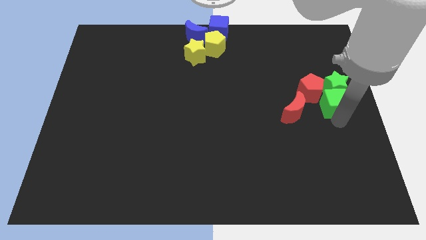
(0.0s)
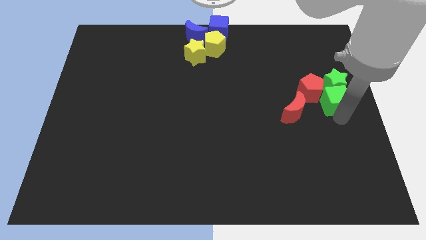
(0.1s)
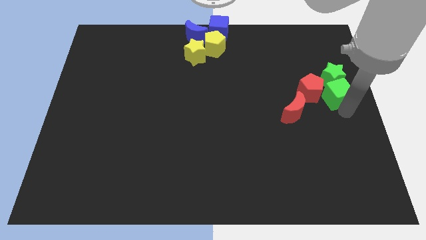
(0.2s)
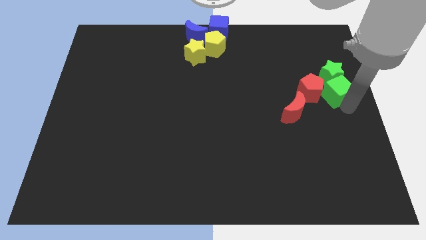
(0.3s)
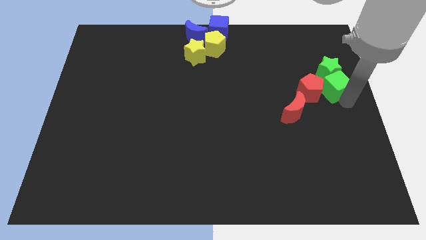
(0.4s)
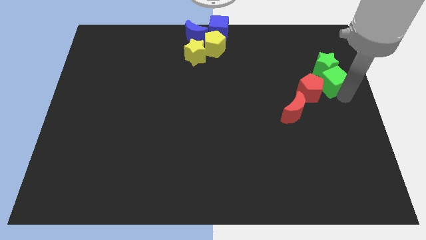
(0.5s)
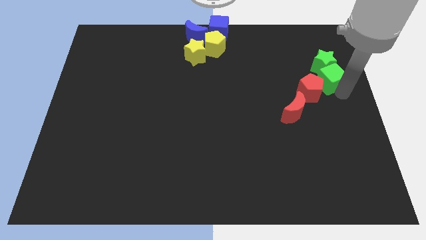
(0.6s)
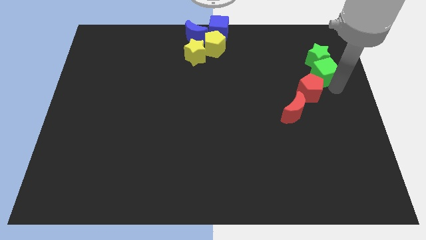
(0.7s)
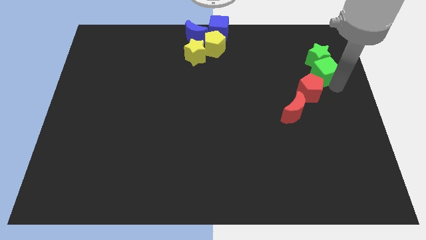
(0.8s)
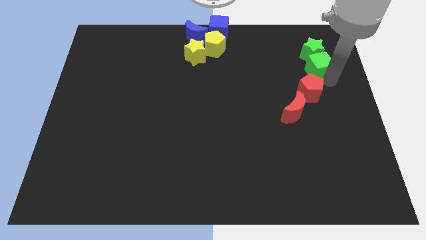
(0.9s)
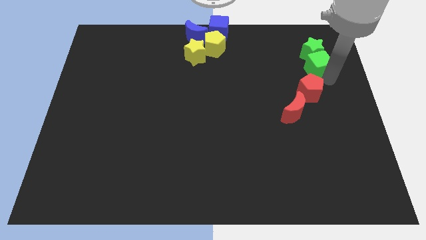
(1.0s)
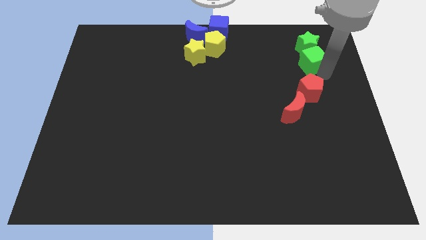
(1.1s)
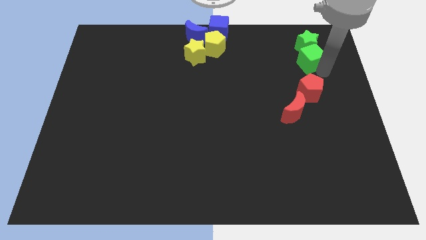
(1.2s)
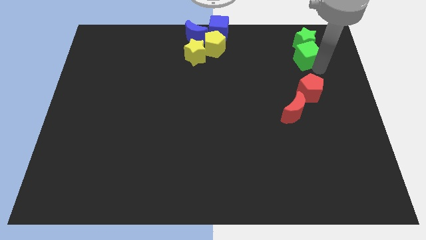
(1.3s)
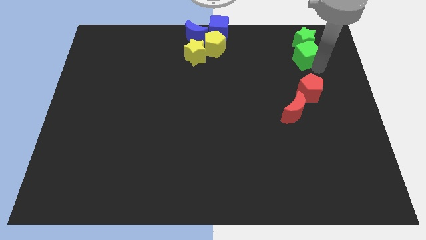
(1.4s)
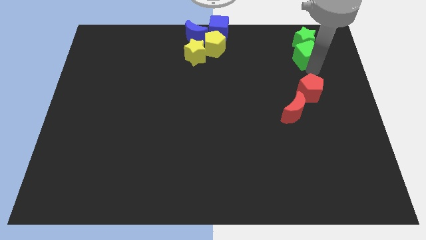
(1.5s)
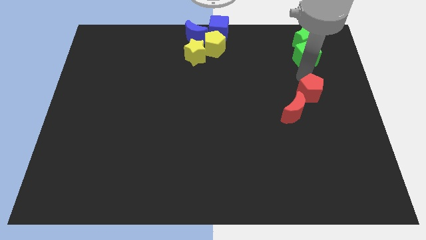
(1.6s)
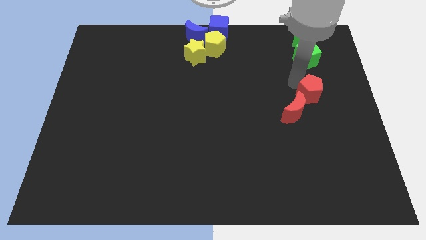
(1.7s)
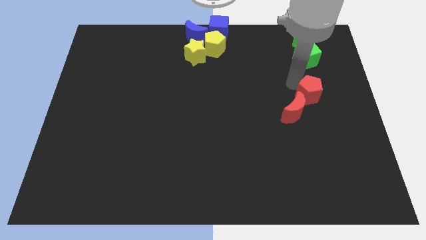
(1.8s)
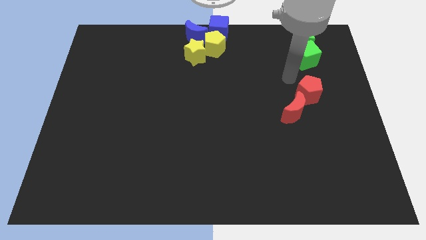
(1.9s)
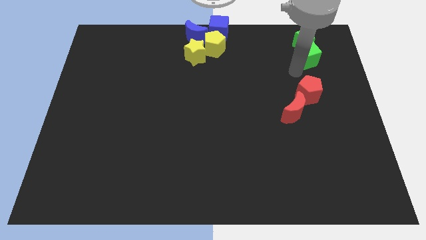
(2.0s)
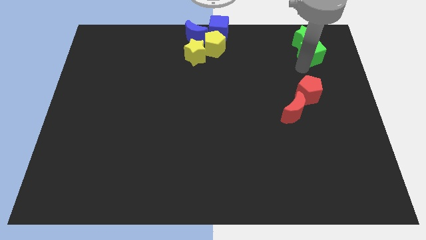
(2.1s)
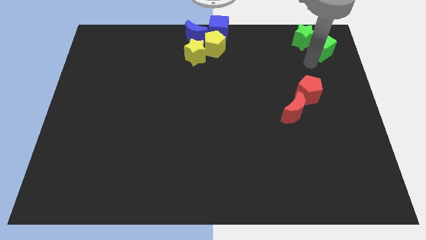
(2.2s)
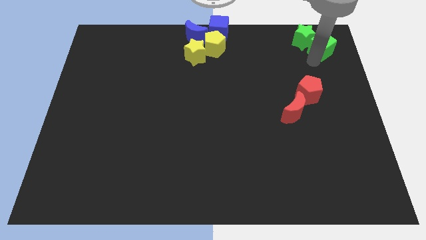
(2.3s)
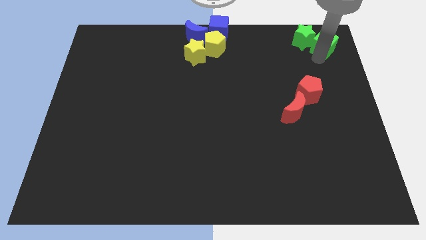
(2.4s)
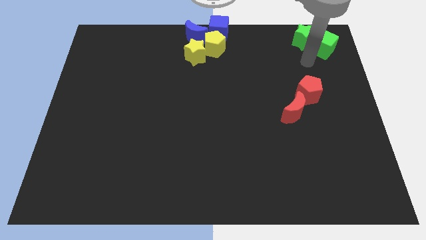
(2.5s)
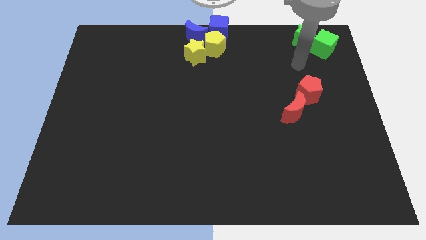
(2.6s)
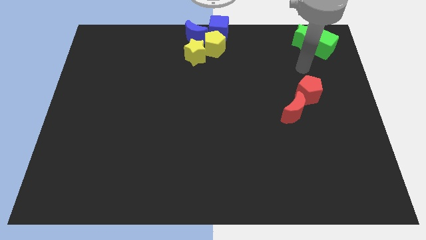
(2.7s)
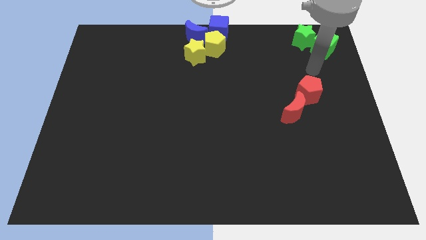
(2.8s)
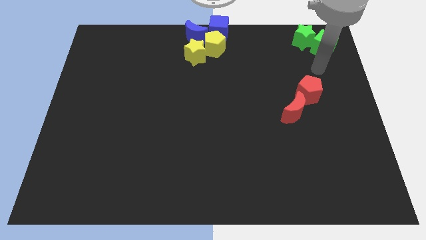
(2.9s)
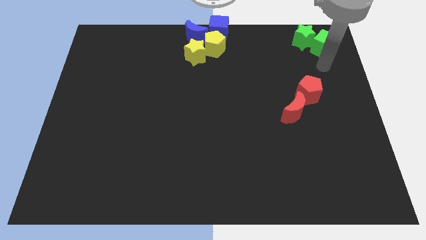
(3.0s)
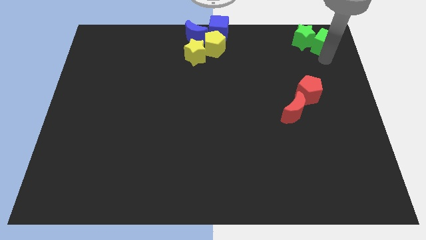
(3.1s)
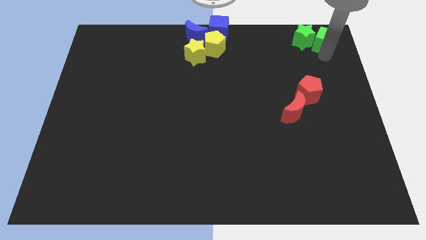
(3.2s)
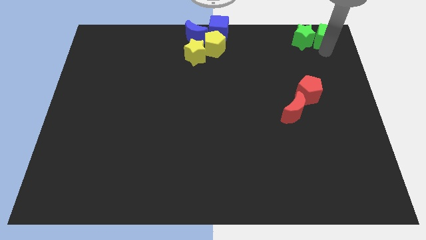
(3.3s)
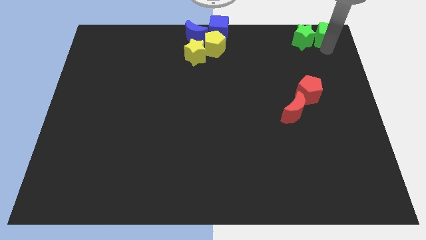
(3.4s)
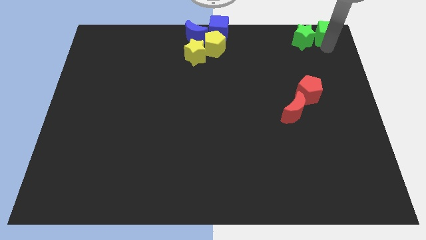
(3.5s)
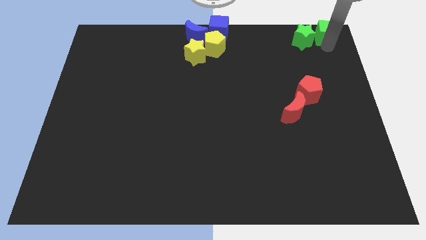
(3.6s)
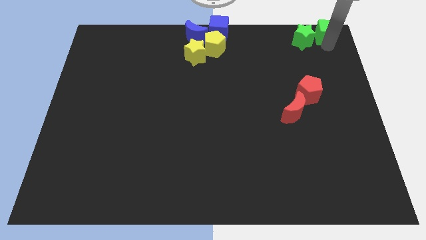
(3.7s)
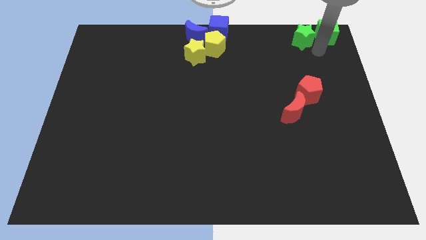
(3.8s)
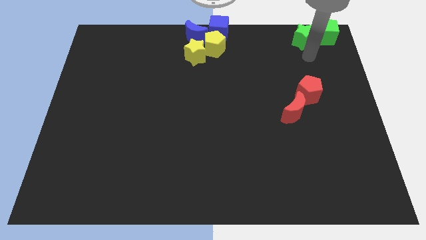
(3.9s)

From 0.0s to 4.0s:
push the green blocks towards the top of the board

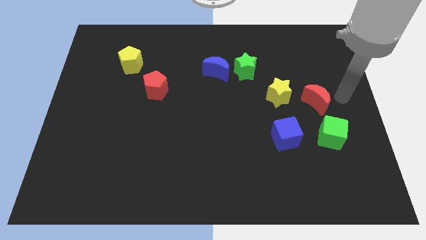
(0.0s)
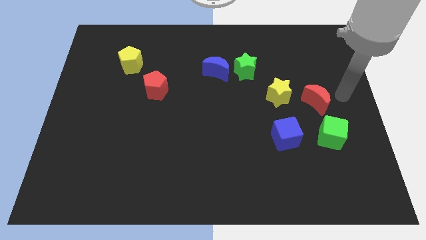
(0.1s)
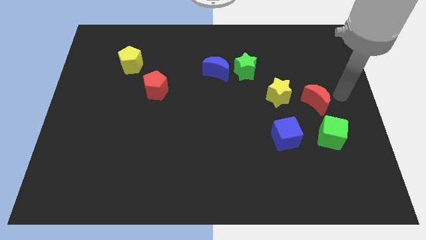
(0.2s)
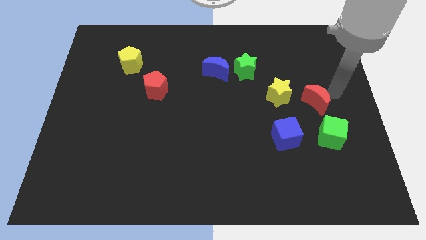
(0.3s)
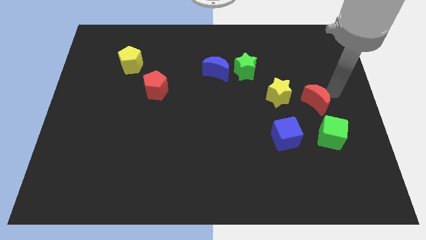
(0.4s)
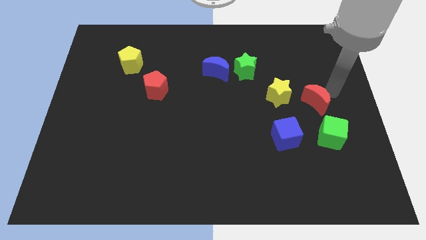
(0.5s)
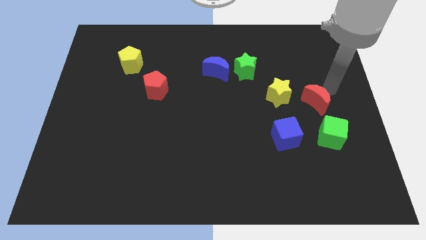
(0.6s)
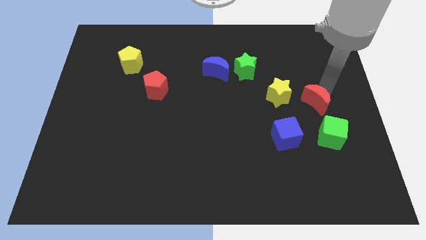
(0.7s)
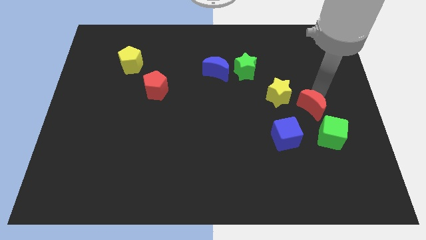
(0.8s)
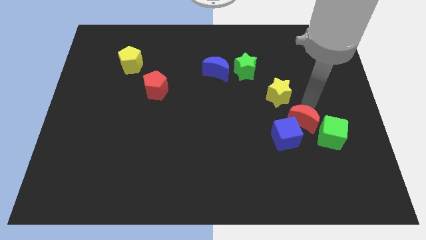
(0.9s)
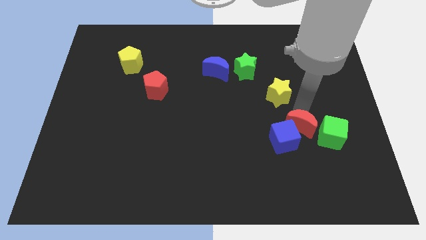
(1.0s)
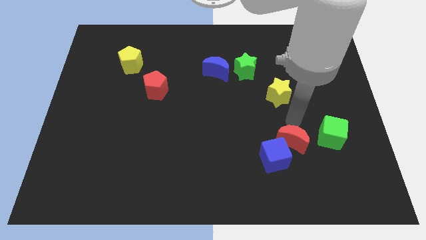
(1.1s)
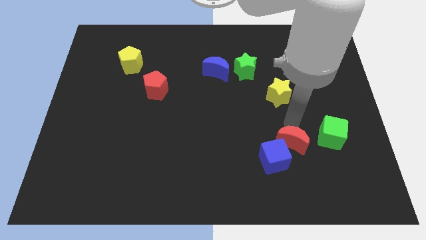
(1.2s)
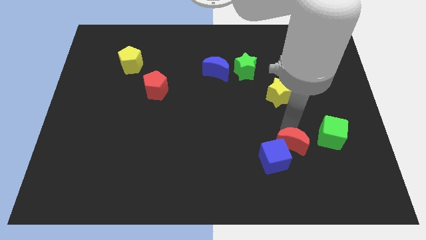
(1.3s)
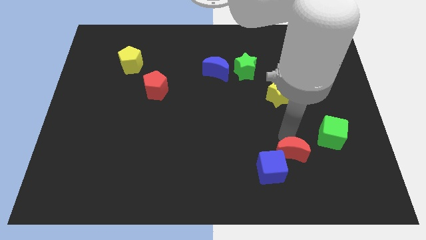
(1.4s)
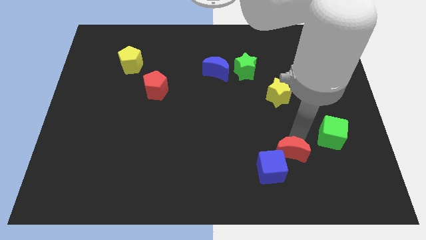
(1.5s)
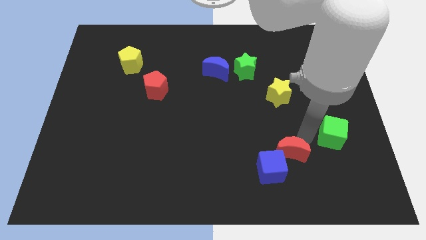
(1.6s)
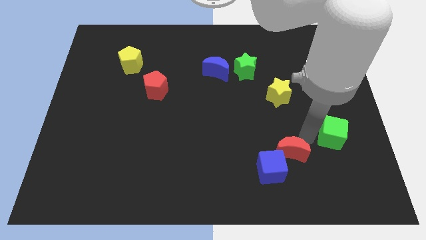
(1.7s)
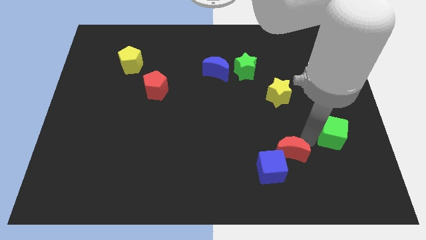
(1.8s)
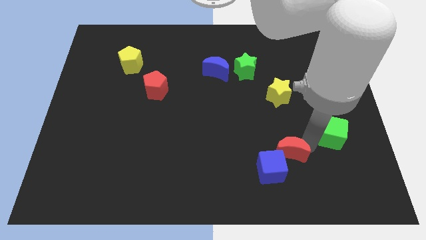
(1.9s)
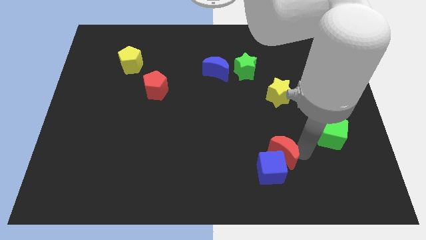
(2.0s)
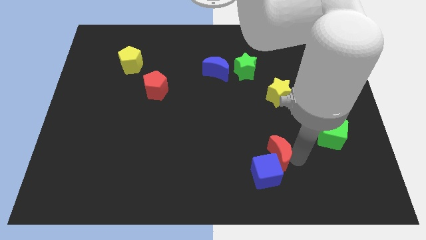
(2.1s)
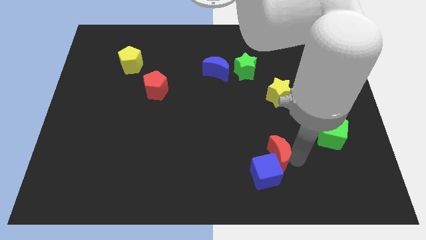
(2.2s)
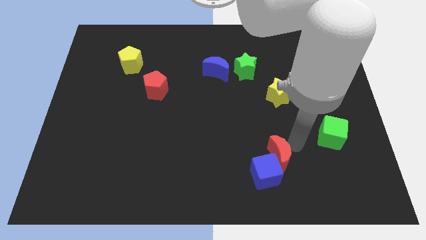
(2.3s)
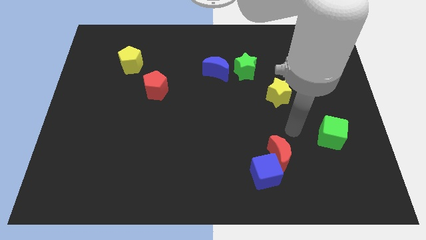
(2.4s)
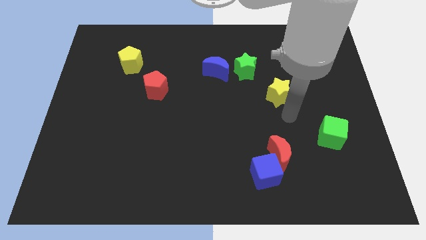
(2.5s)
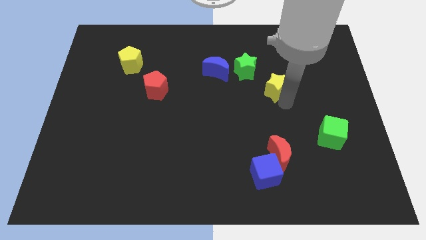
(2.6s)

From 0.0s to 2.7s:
push the red moon and blue cube downward

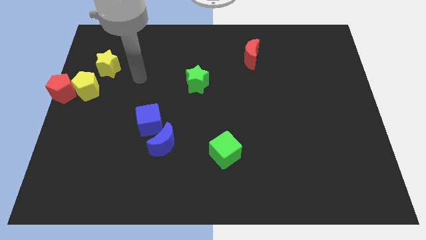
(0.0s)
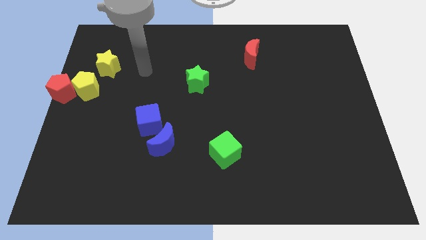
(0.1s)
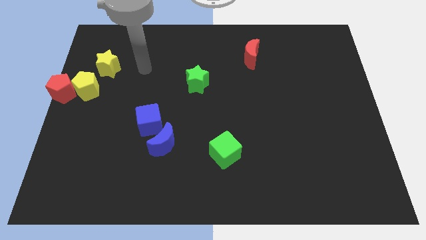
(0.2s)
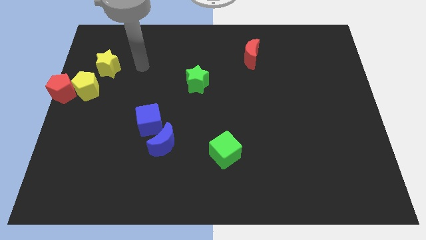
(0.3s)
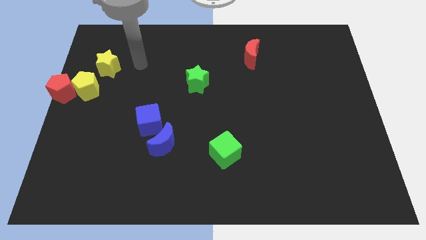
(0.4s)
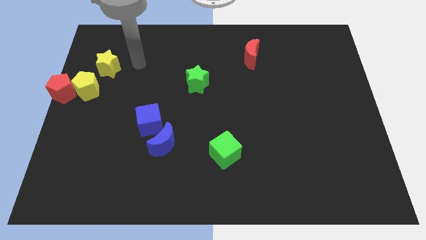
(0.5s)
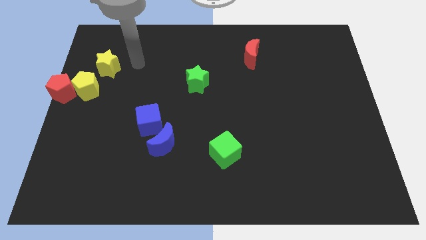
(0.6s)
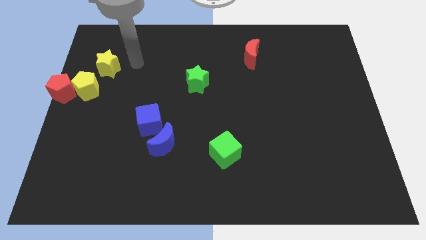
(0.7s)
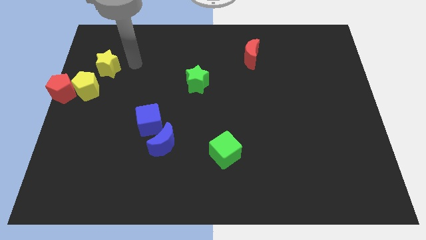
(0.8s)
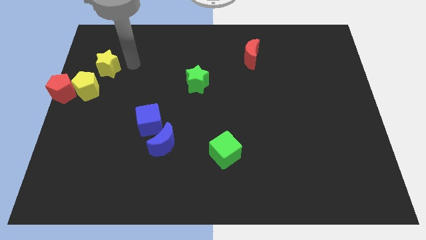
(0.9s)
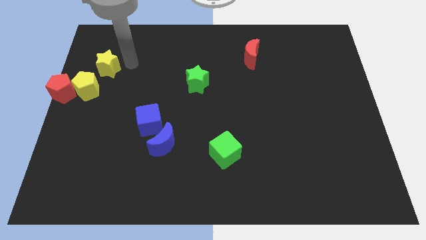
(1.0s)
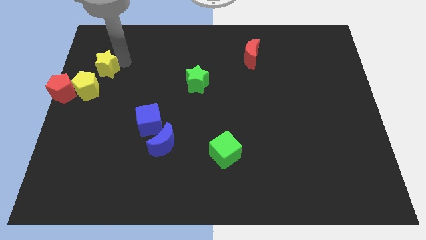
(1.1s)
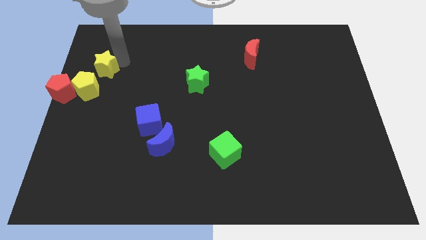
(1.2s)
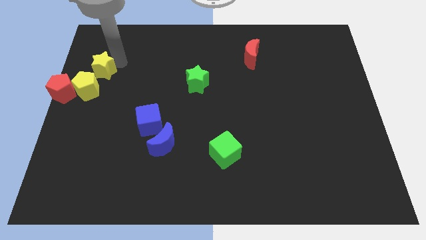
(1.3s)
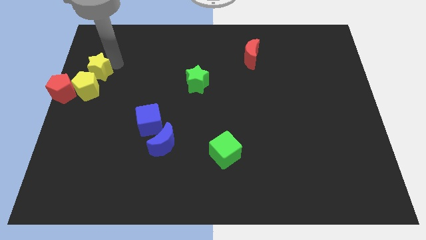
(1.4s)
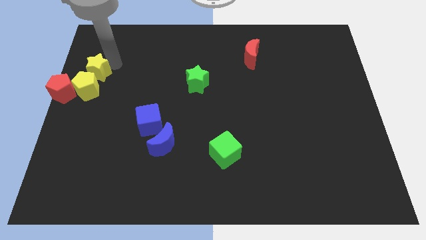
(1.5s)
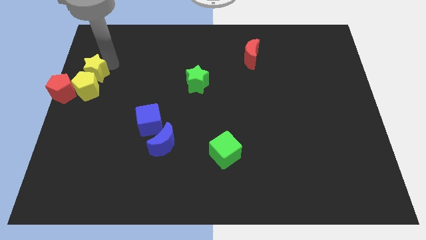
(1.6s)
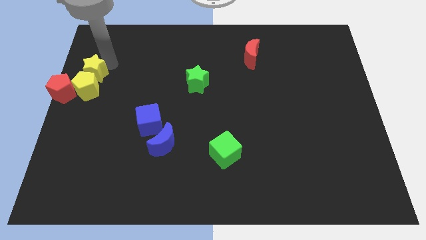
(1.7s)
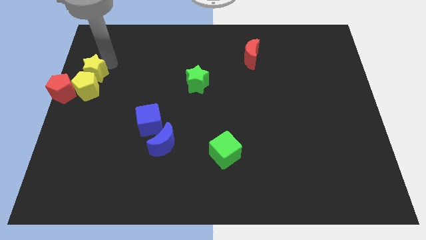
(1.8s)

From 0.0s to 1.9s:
move the yellow star to the top right side of the yellow pentagon

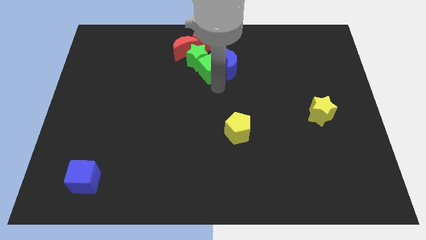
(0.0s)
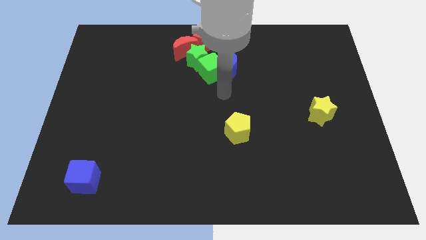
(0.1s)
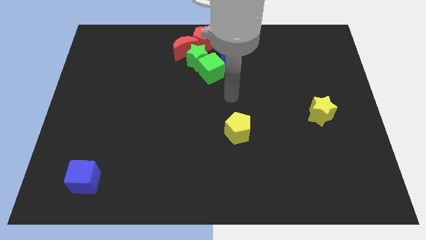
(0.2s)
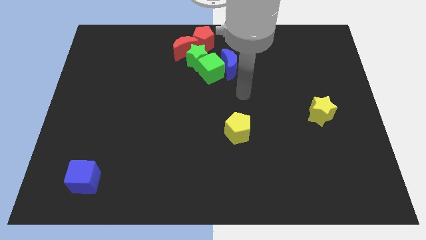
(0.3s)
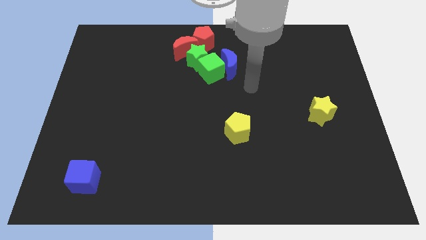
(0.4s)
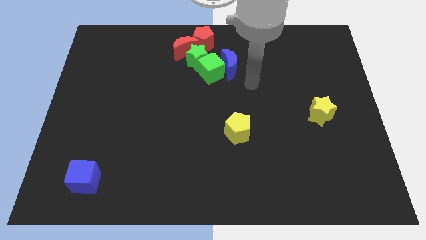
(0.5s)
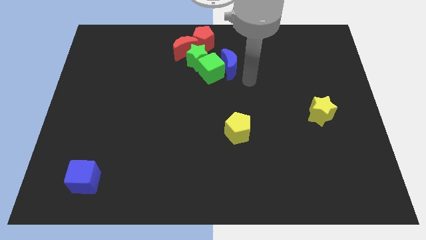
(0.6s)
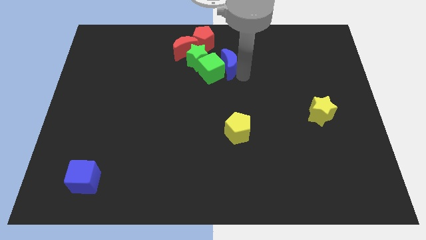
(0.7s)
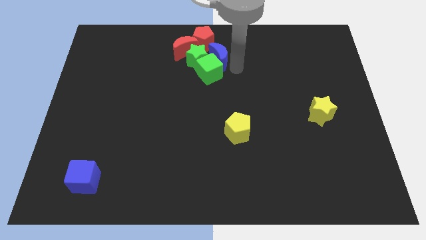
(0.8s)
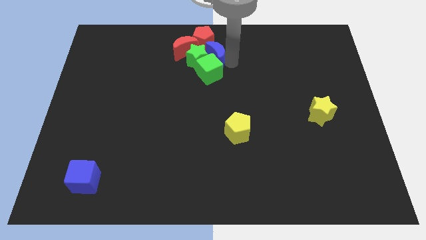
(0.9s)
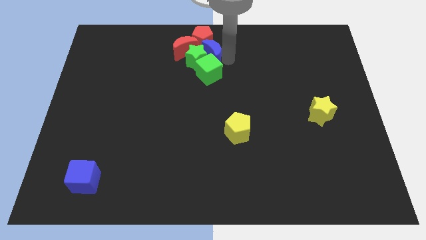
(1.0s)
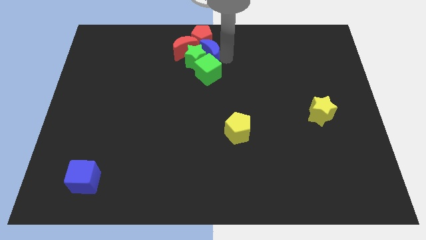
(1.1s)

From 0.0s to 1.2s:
place the blue moon below to the red pentagon
